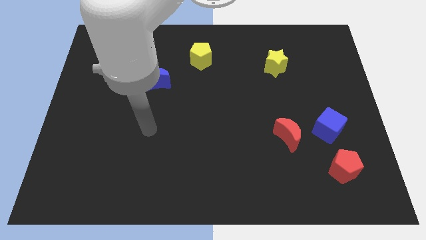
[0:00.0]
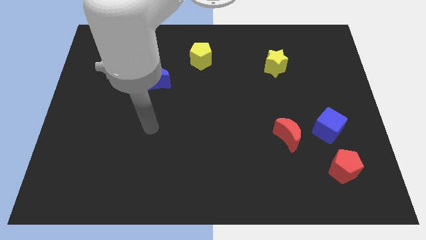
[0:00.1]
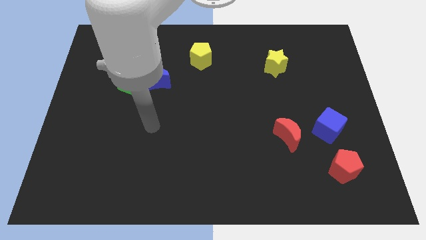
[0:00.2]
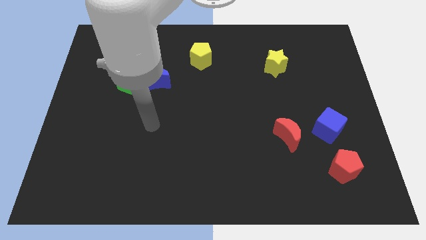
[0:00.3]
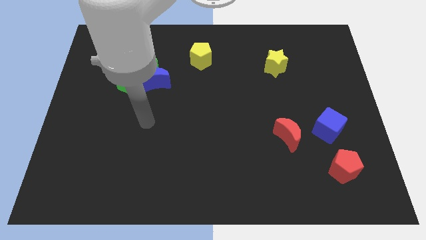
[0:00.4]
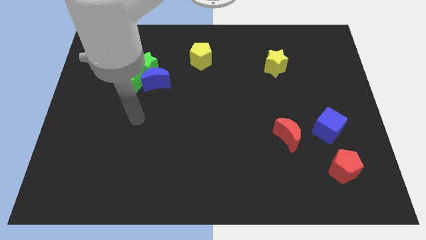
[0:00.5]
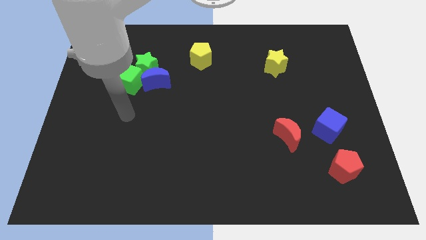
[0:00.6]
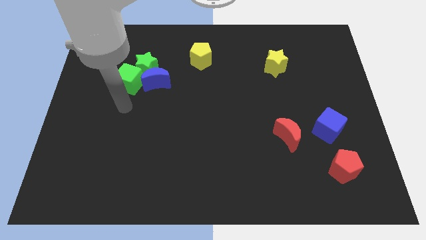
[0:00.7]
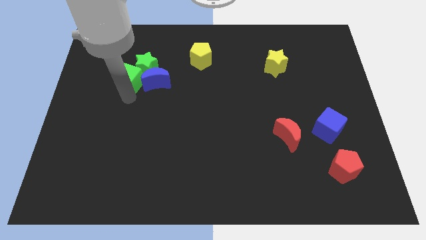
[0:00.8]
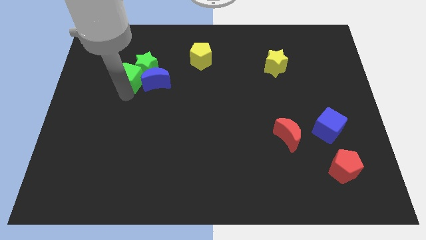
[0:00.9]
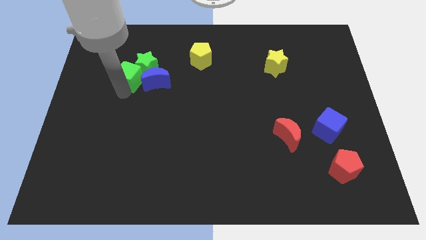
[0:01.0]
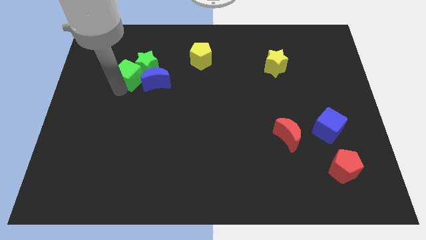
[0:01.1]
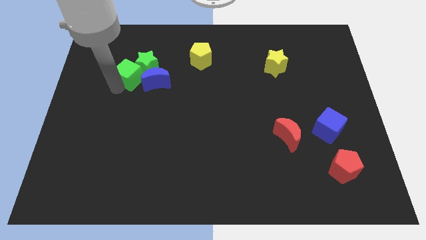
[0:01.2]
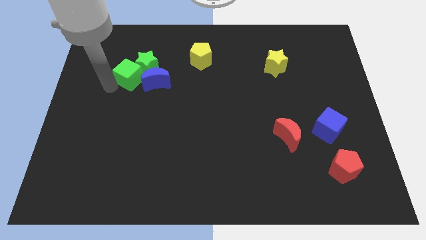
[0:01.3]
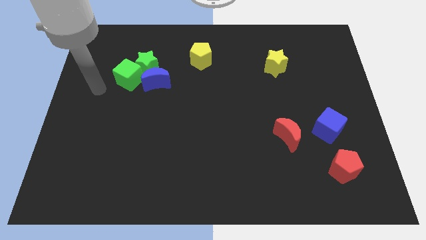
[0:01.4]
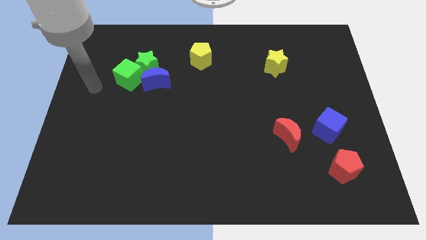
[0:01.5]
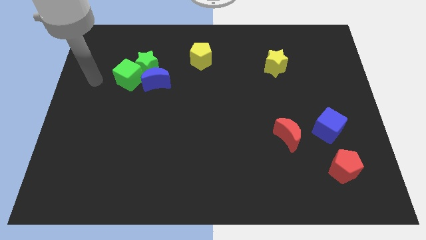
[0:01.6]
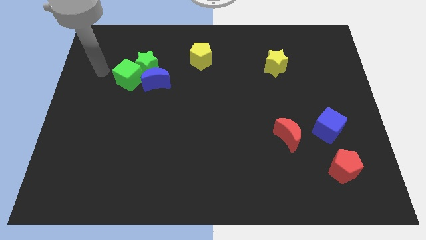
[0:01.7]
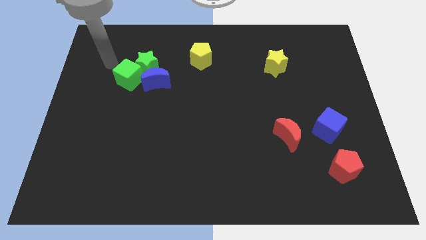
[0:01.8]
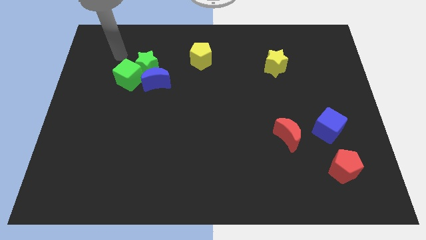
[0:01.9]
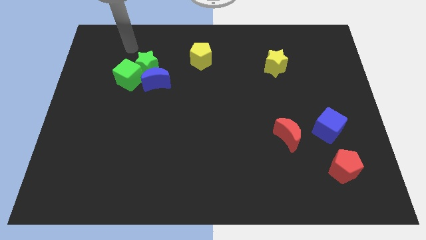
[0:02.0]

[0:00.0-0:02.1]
slightly push the green blocks to the top

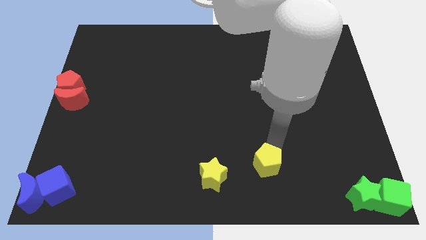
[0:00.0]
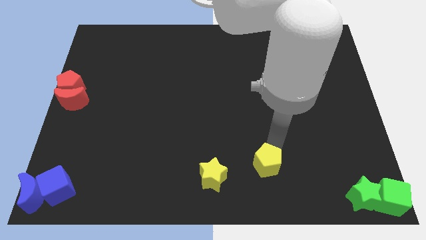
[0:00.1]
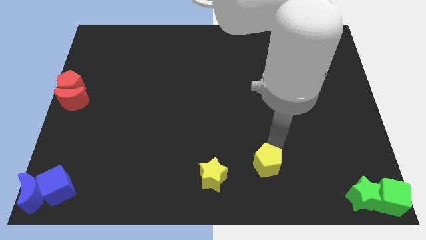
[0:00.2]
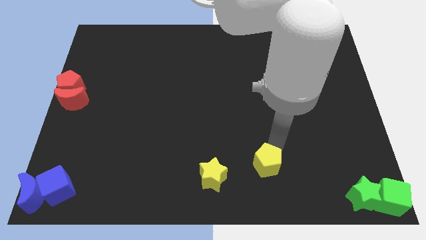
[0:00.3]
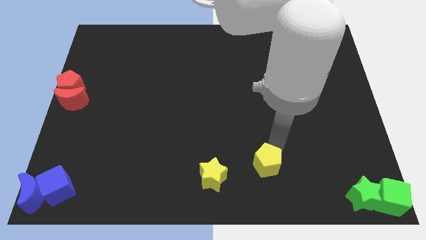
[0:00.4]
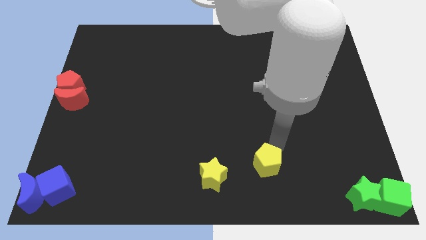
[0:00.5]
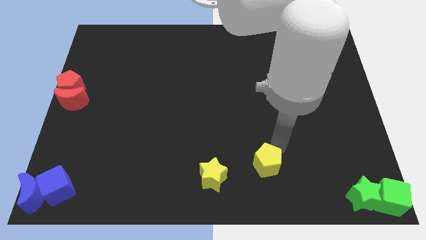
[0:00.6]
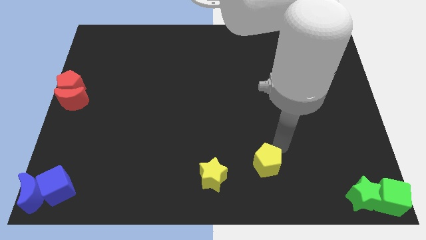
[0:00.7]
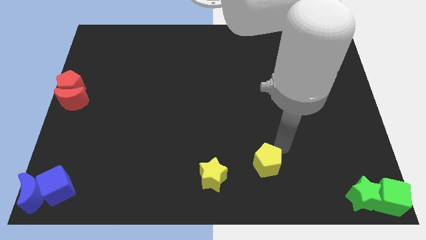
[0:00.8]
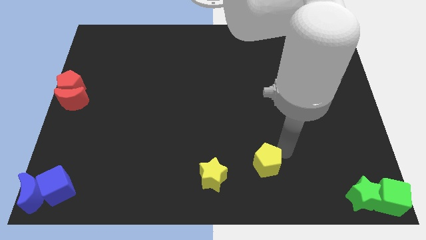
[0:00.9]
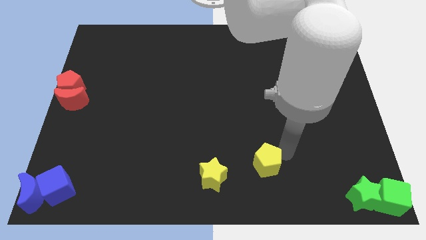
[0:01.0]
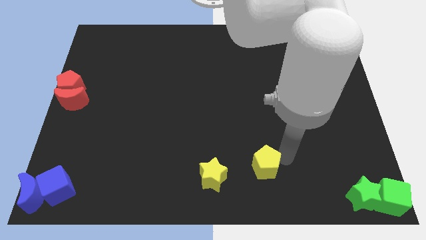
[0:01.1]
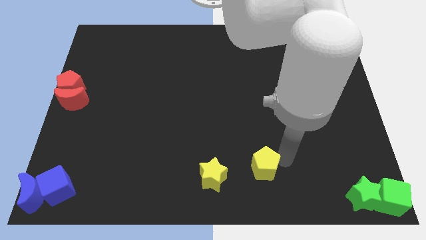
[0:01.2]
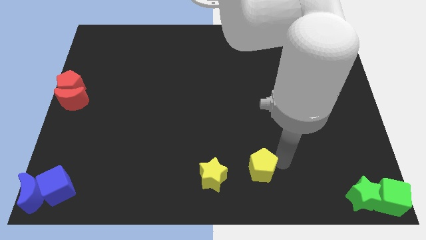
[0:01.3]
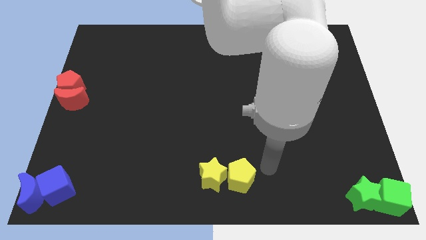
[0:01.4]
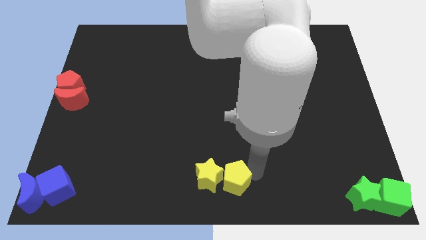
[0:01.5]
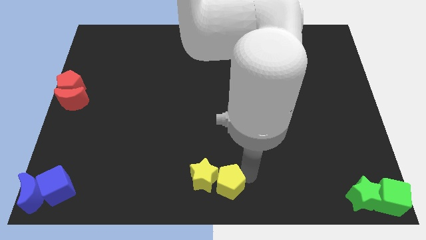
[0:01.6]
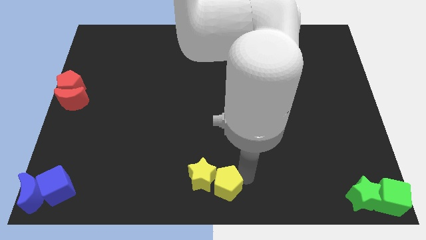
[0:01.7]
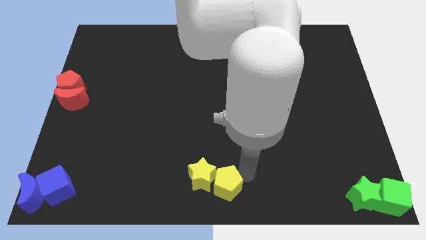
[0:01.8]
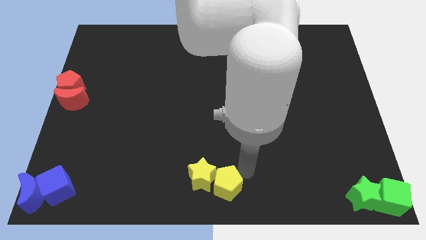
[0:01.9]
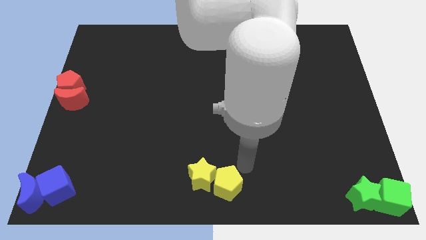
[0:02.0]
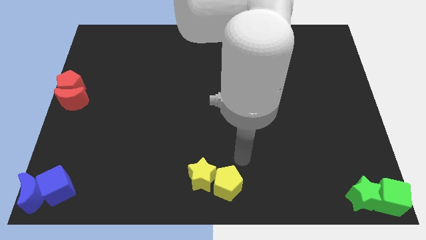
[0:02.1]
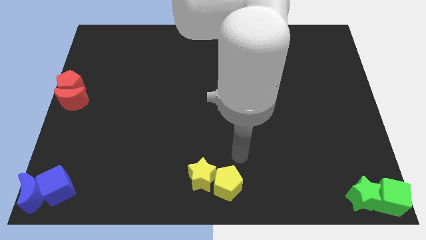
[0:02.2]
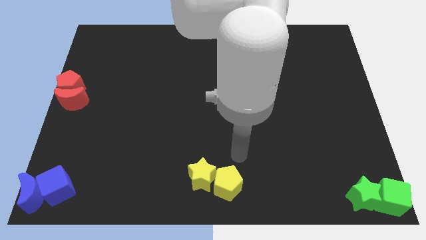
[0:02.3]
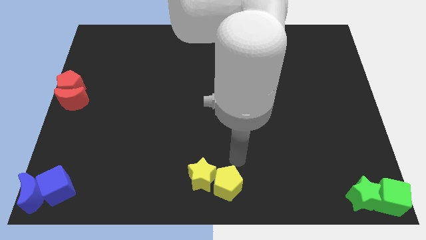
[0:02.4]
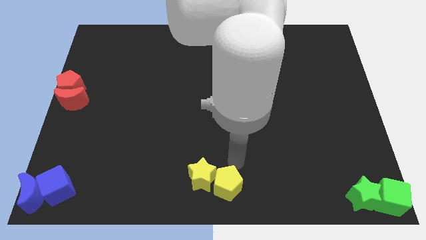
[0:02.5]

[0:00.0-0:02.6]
push the yellow pentagon to the right of the yellow star

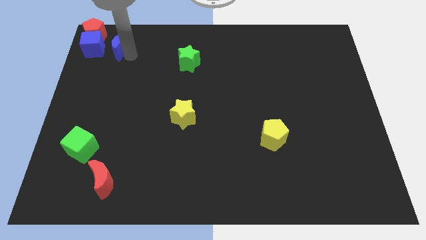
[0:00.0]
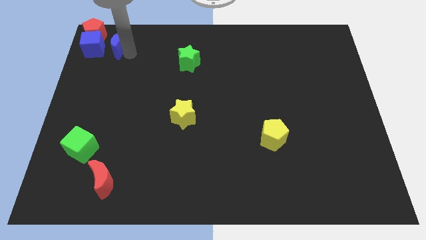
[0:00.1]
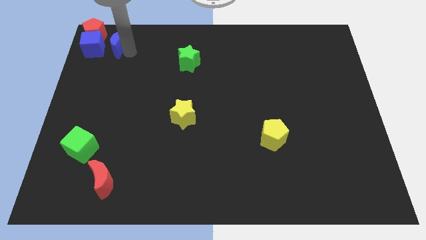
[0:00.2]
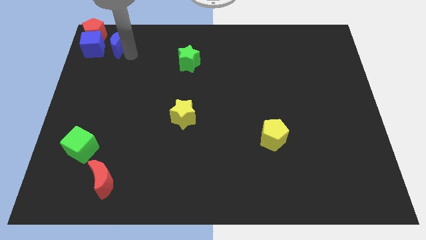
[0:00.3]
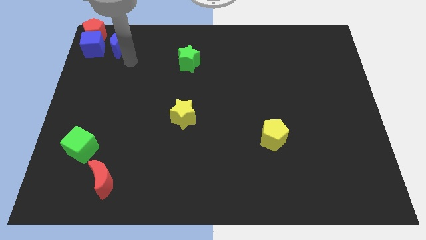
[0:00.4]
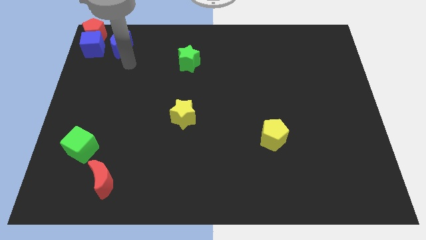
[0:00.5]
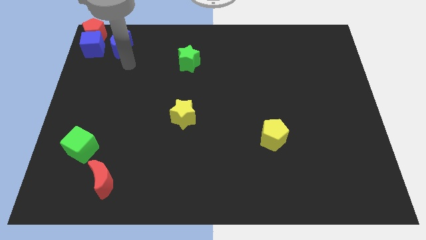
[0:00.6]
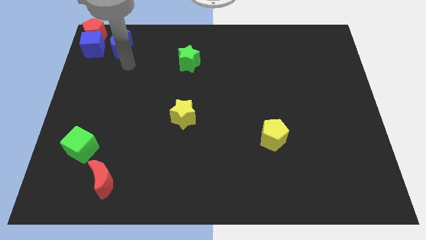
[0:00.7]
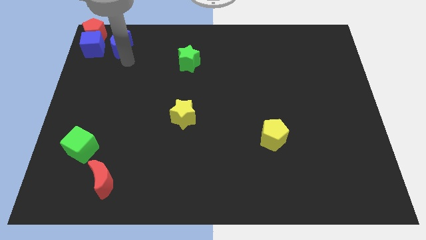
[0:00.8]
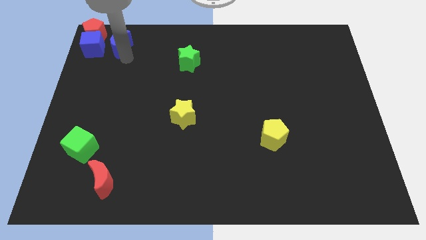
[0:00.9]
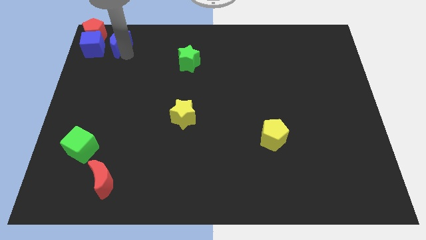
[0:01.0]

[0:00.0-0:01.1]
move the blue crescent to the right of the blue cube

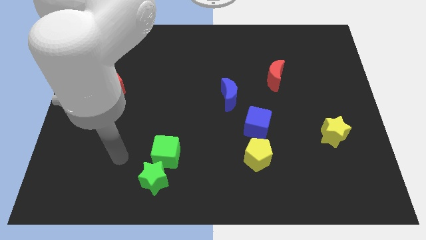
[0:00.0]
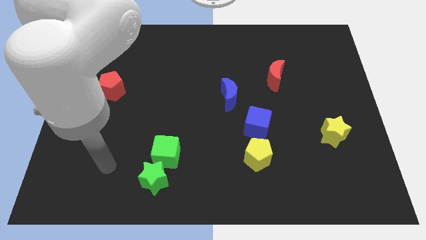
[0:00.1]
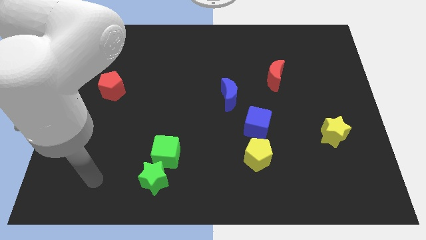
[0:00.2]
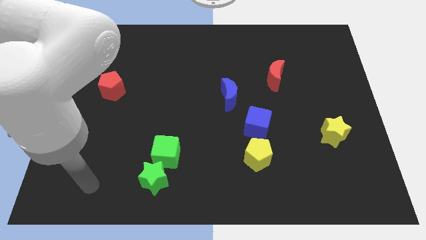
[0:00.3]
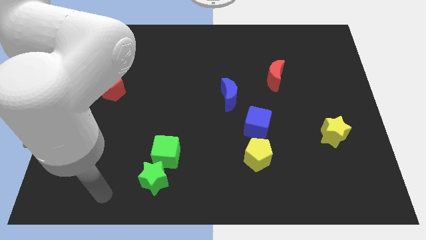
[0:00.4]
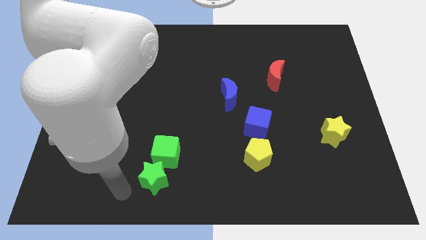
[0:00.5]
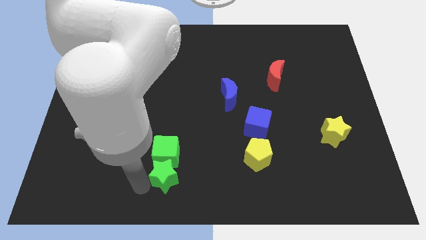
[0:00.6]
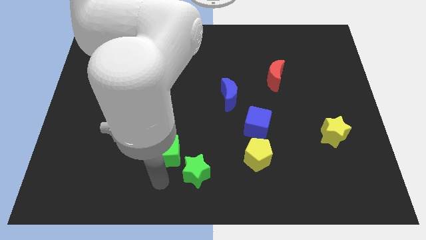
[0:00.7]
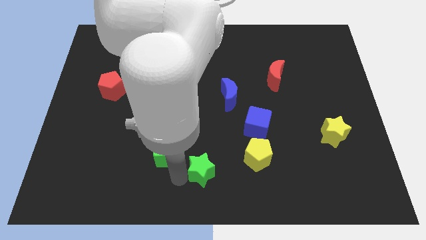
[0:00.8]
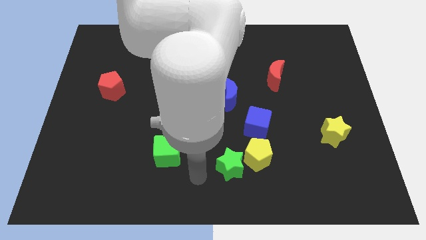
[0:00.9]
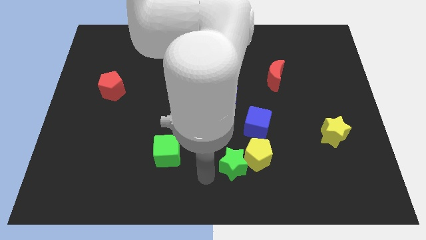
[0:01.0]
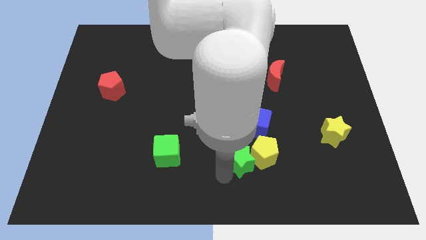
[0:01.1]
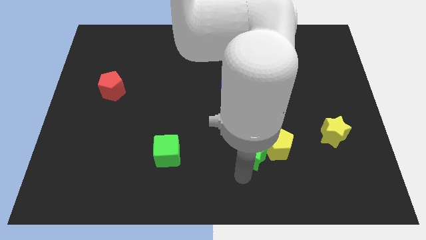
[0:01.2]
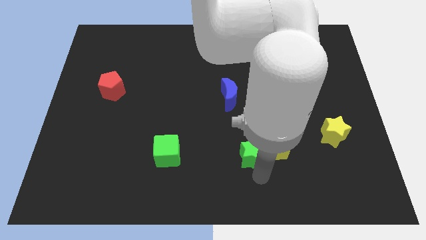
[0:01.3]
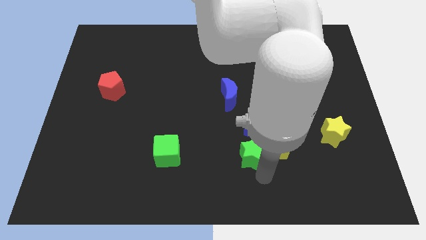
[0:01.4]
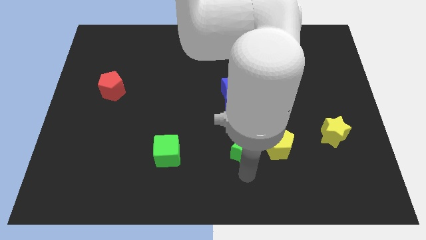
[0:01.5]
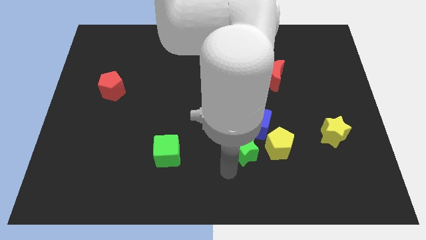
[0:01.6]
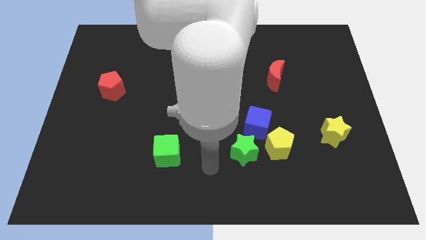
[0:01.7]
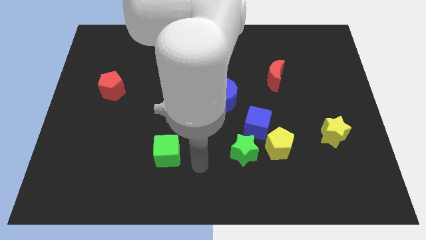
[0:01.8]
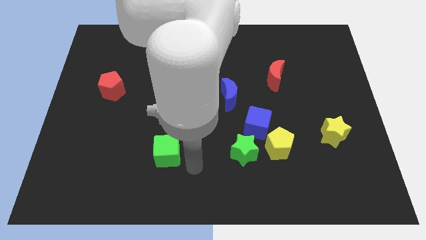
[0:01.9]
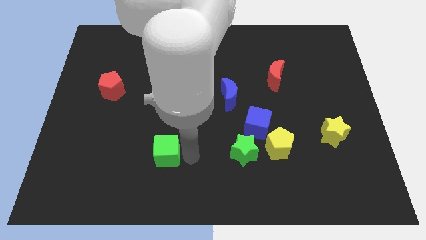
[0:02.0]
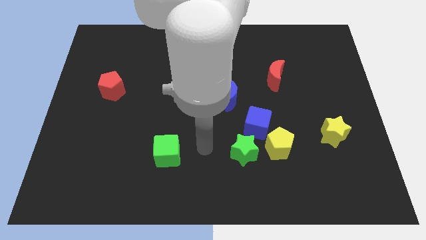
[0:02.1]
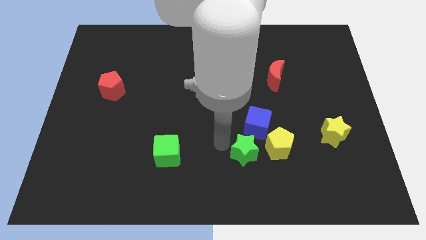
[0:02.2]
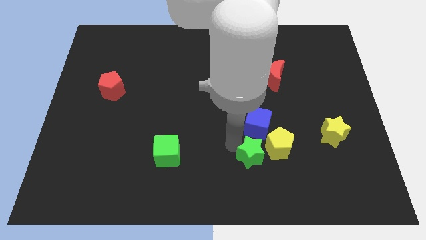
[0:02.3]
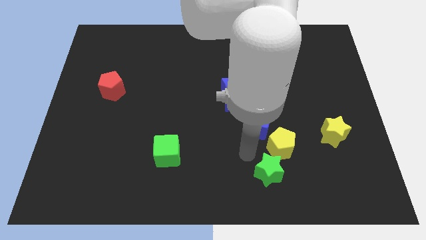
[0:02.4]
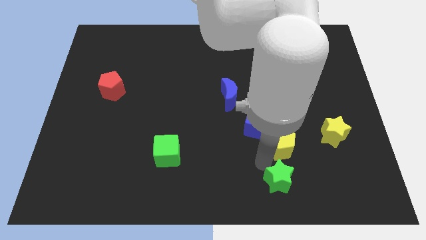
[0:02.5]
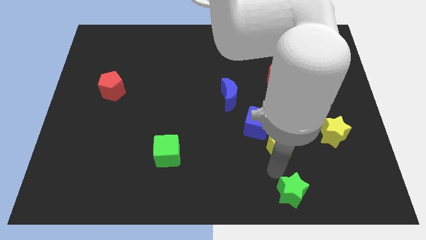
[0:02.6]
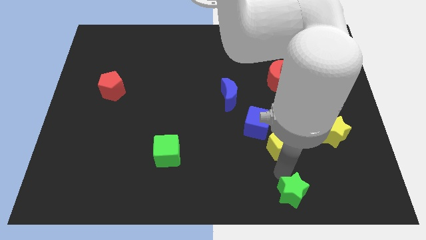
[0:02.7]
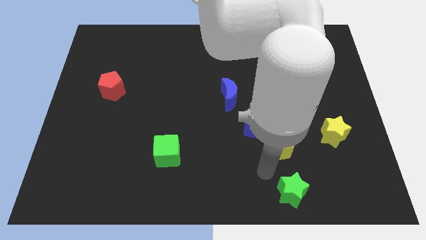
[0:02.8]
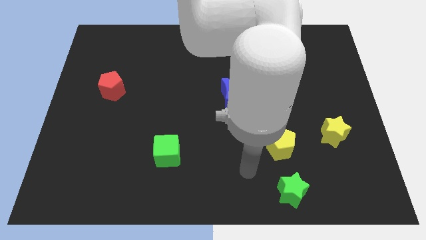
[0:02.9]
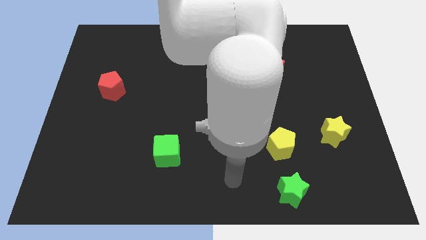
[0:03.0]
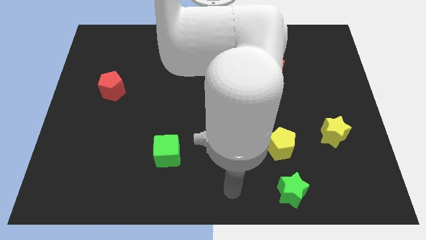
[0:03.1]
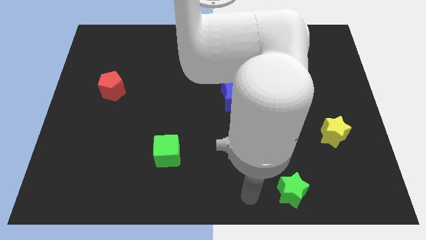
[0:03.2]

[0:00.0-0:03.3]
put the green star below yellow star
